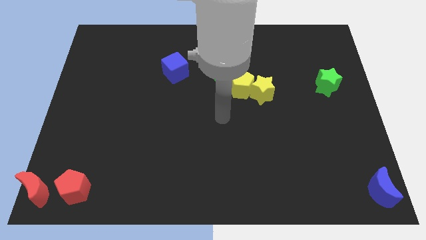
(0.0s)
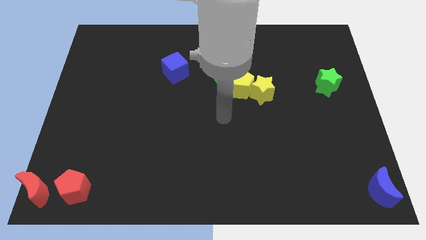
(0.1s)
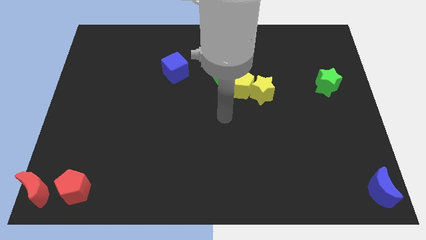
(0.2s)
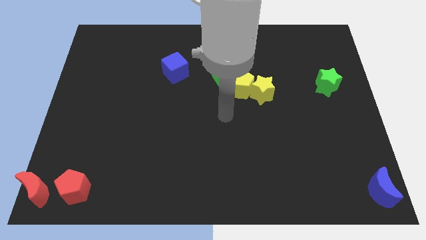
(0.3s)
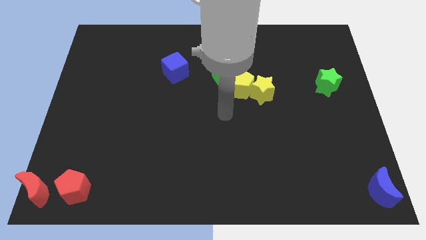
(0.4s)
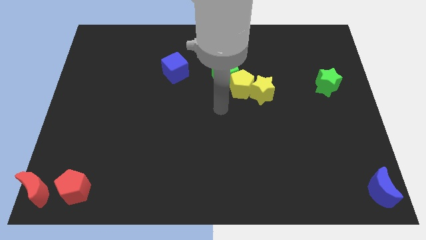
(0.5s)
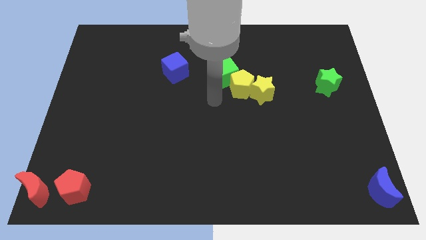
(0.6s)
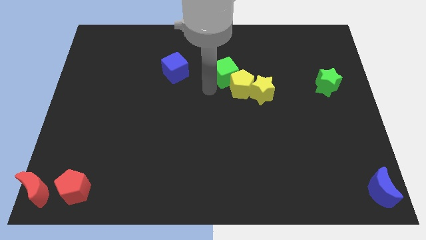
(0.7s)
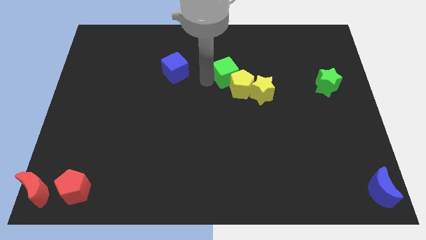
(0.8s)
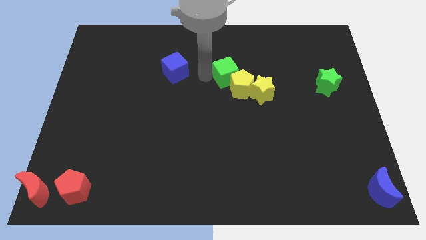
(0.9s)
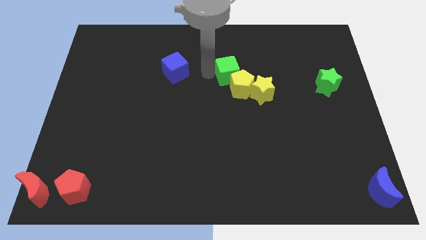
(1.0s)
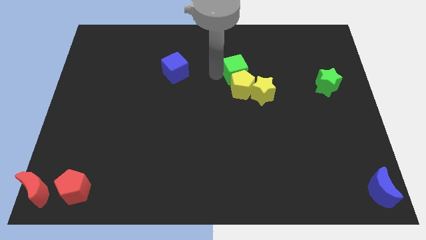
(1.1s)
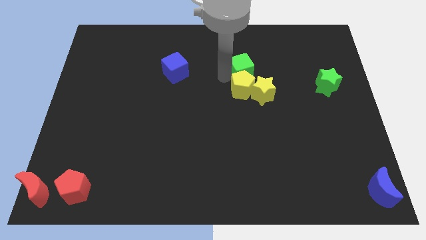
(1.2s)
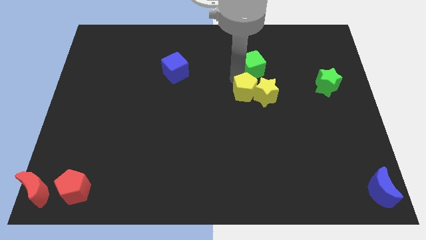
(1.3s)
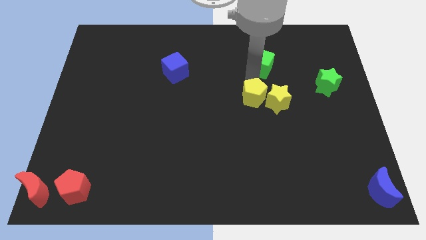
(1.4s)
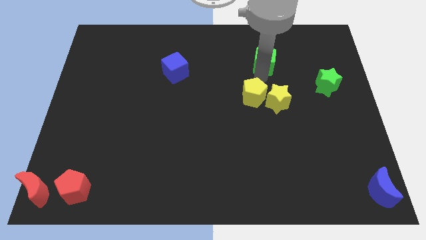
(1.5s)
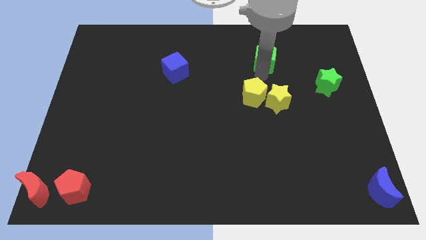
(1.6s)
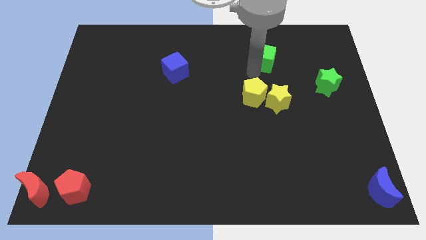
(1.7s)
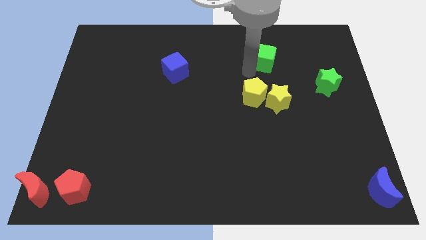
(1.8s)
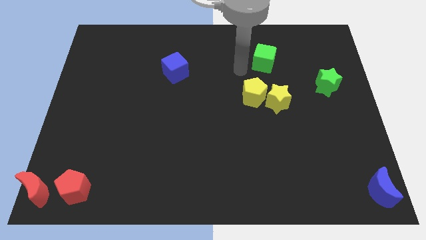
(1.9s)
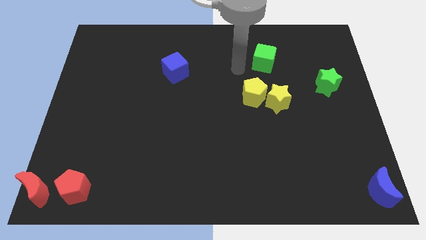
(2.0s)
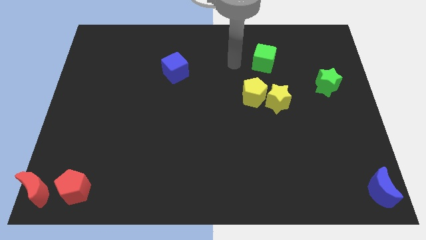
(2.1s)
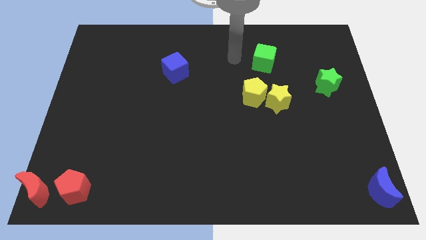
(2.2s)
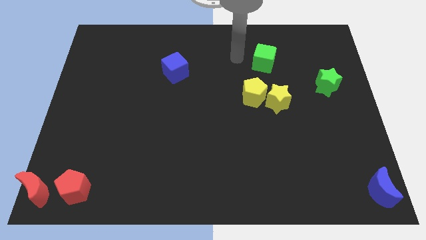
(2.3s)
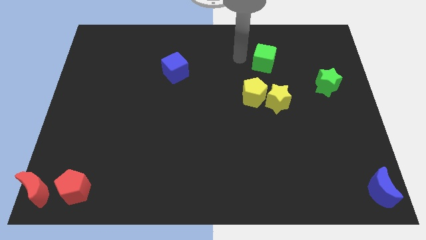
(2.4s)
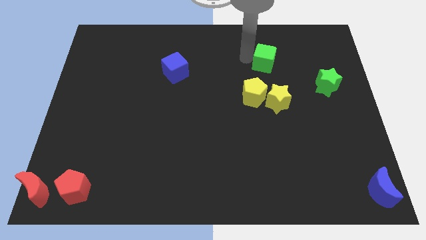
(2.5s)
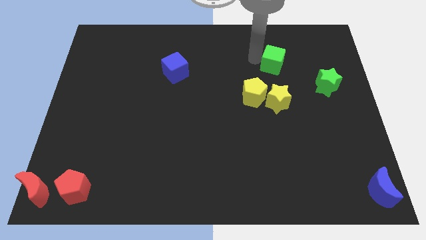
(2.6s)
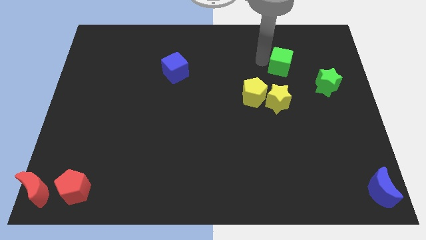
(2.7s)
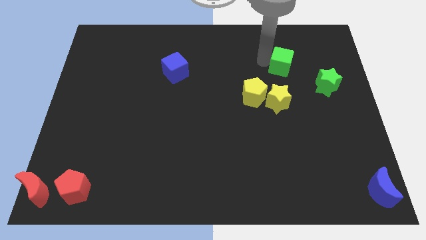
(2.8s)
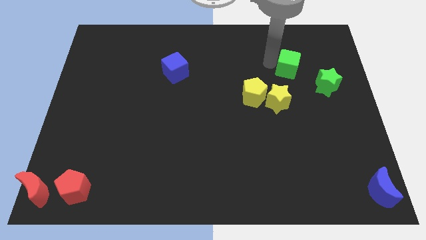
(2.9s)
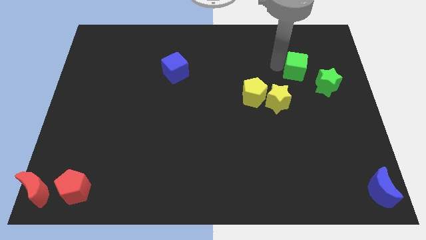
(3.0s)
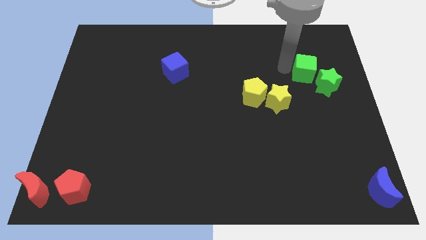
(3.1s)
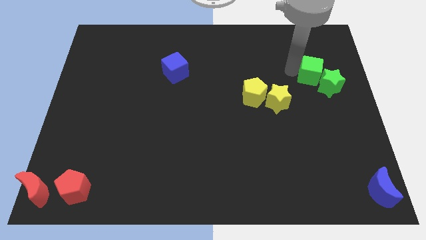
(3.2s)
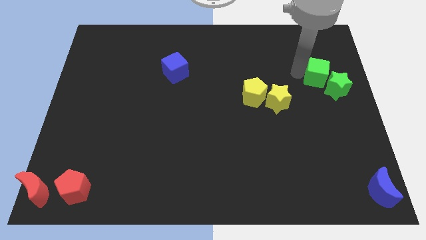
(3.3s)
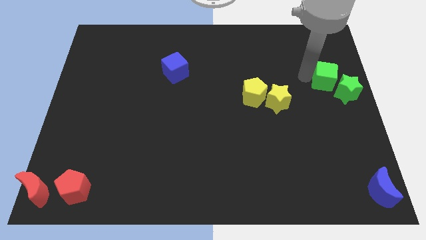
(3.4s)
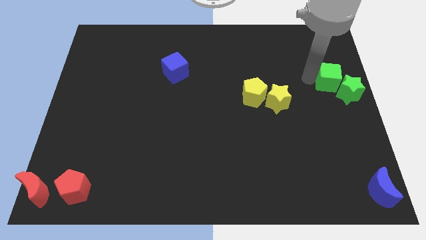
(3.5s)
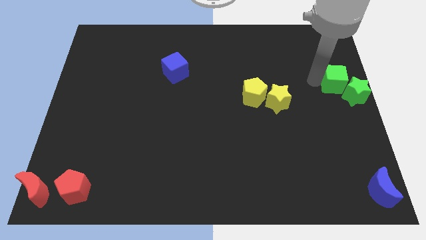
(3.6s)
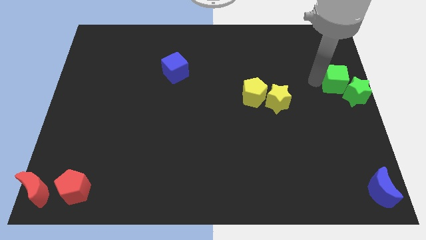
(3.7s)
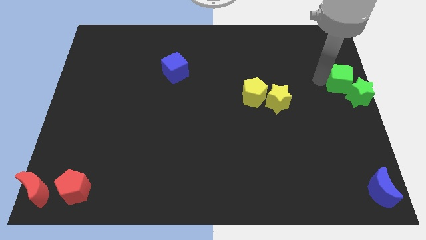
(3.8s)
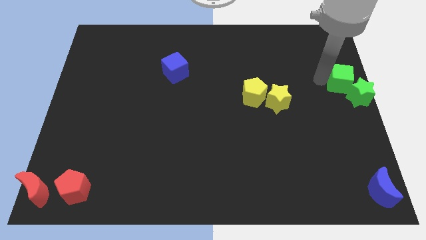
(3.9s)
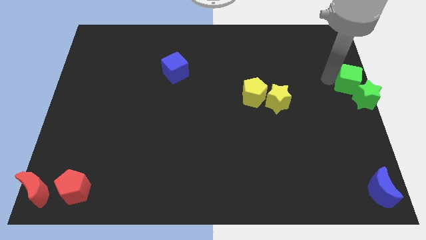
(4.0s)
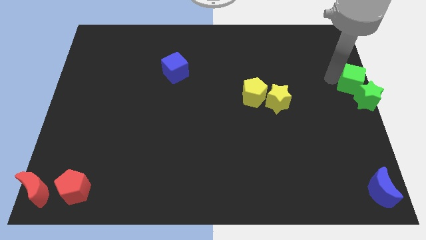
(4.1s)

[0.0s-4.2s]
adjust the green cube and the green star at the center left of the board

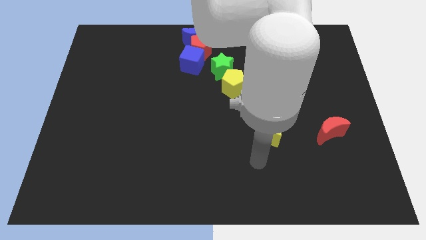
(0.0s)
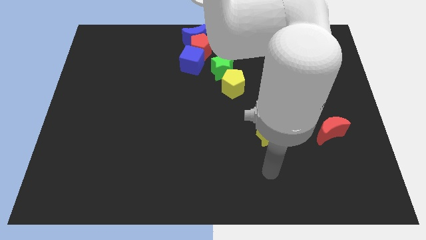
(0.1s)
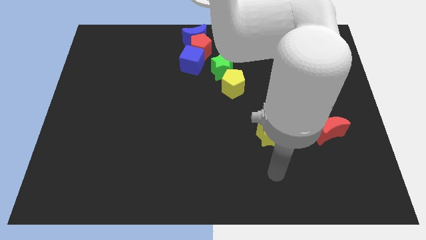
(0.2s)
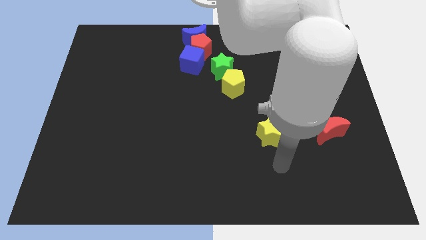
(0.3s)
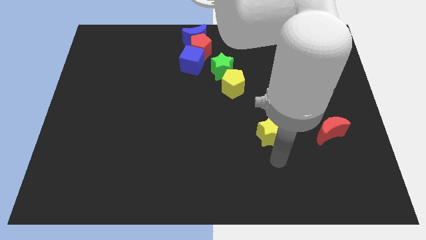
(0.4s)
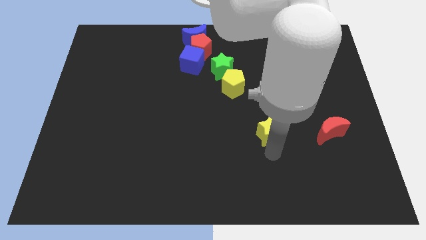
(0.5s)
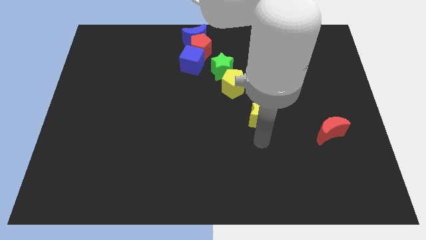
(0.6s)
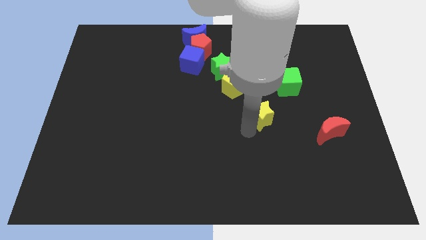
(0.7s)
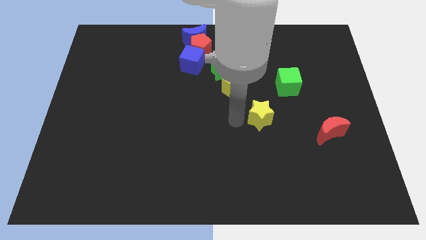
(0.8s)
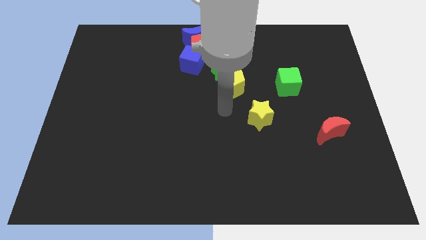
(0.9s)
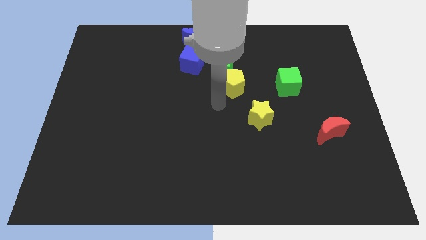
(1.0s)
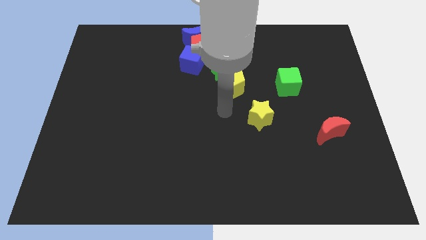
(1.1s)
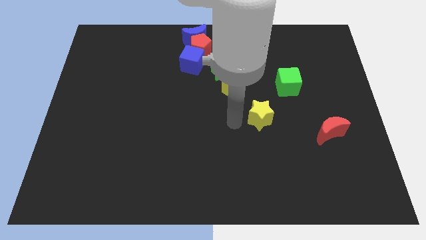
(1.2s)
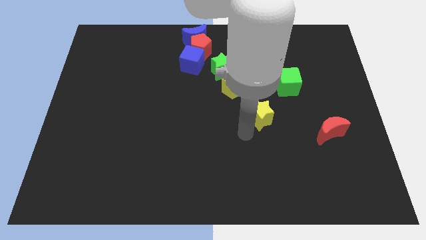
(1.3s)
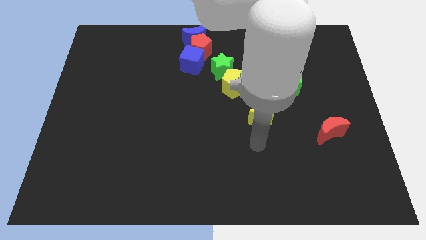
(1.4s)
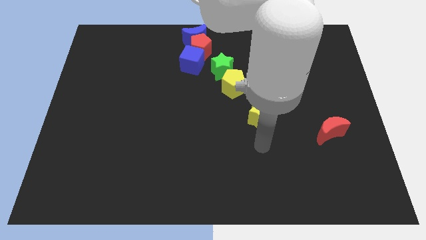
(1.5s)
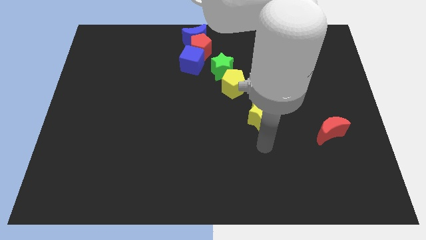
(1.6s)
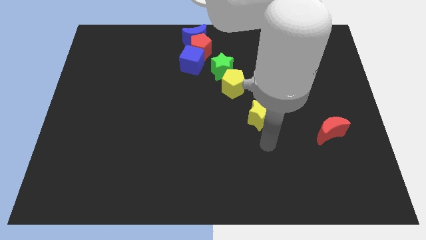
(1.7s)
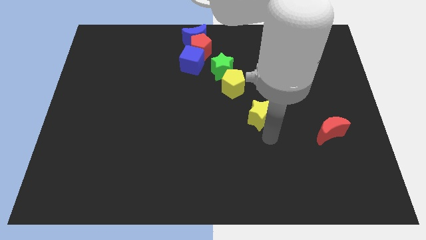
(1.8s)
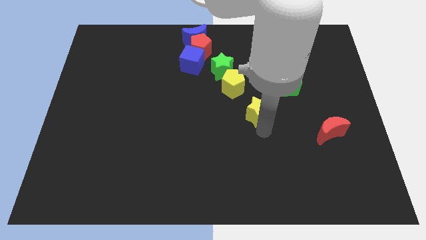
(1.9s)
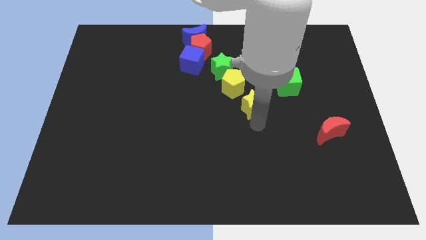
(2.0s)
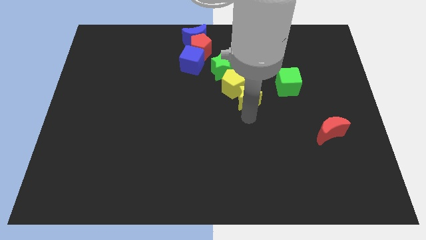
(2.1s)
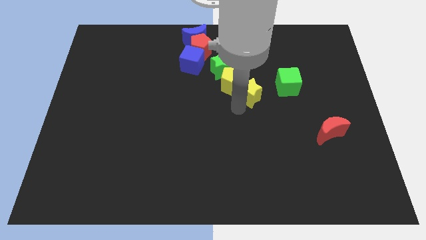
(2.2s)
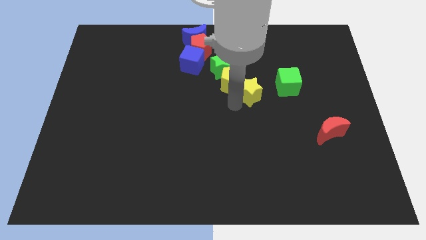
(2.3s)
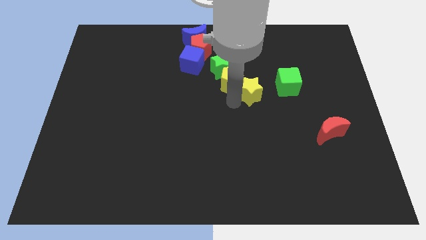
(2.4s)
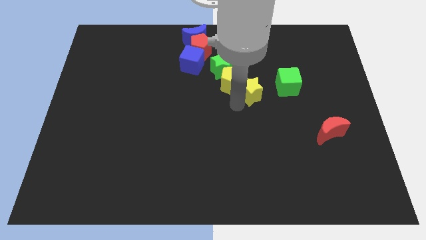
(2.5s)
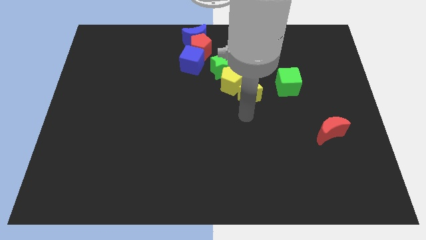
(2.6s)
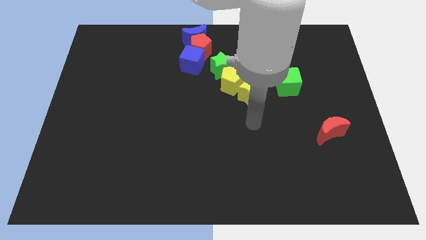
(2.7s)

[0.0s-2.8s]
place yellow star close yellow pentagon

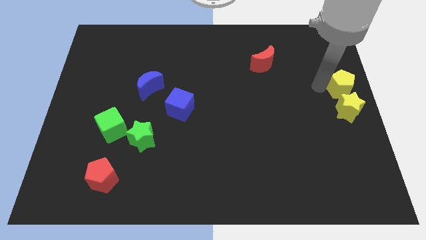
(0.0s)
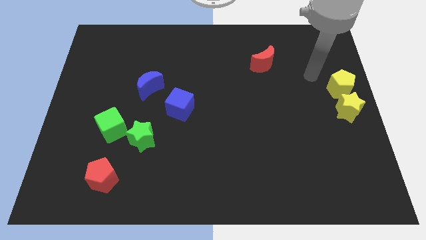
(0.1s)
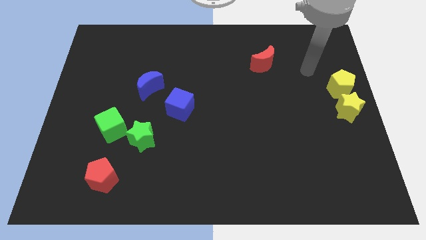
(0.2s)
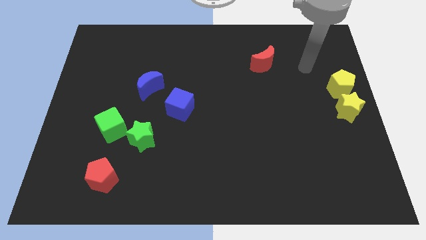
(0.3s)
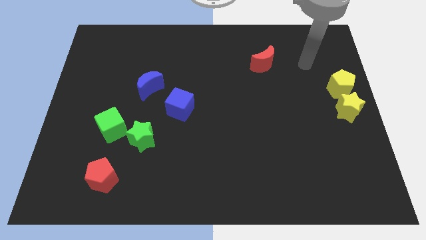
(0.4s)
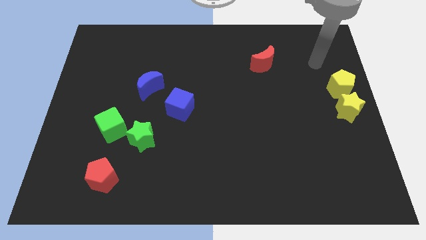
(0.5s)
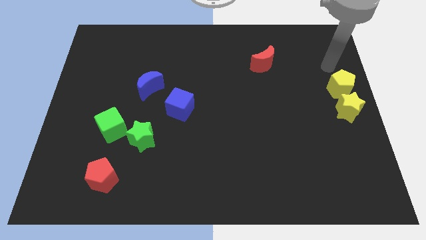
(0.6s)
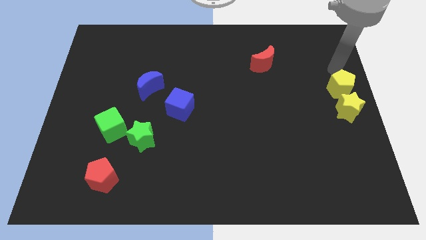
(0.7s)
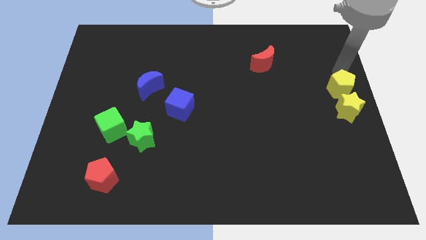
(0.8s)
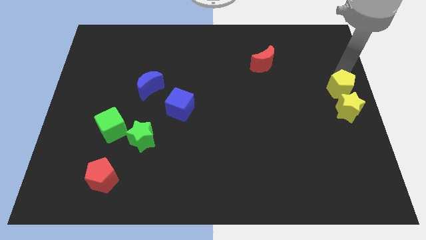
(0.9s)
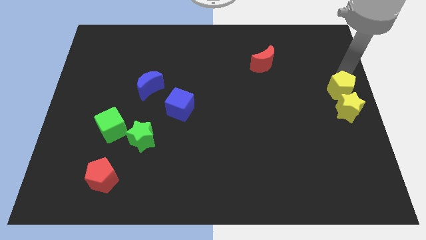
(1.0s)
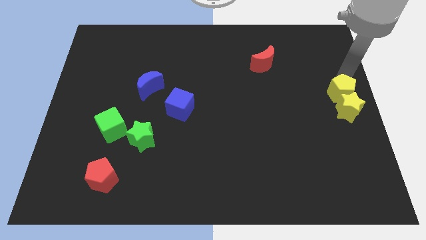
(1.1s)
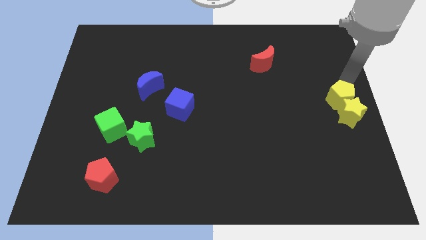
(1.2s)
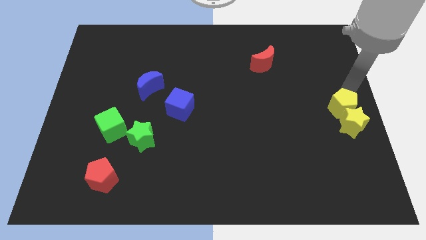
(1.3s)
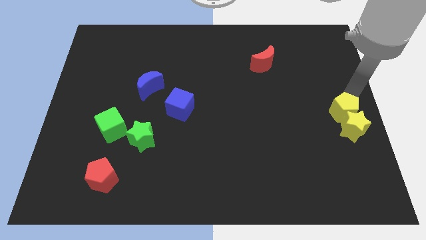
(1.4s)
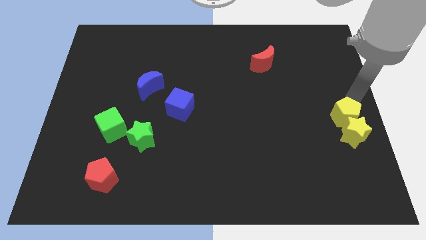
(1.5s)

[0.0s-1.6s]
push yellow pentagon and yellow star together downwards

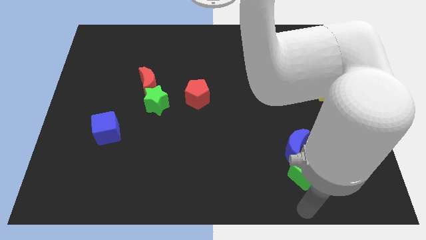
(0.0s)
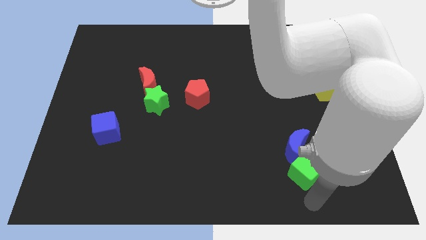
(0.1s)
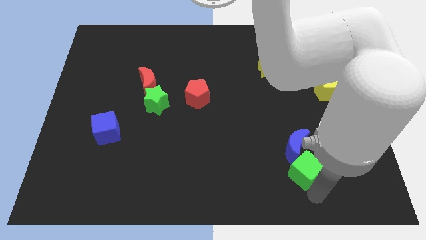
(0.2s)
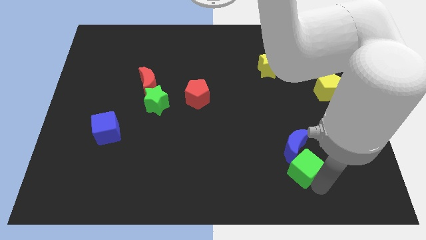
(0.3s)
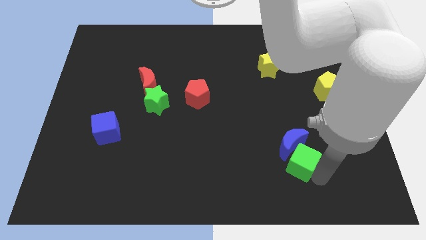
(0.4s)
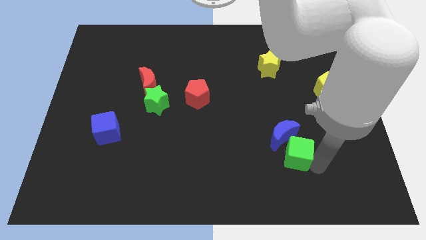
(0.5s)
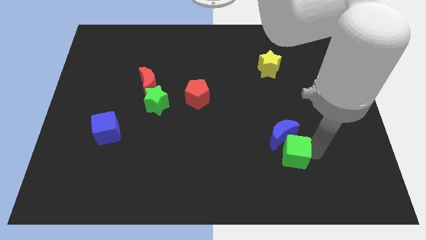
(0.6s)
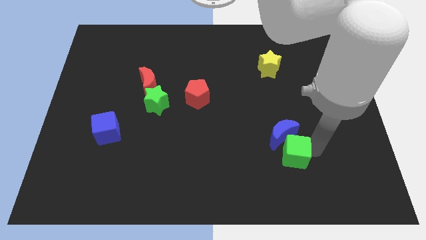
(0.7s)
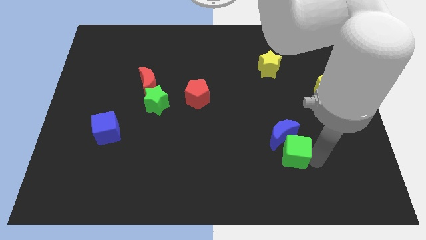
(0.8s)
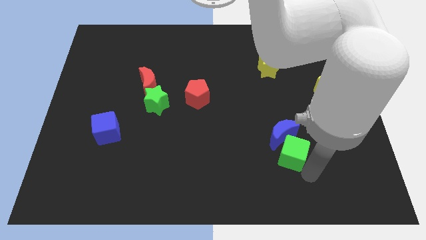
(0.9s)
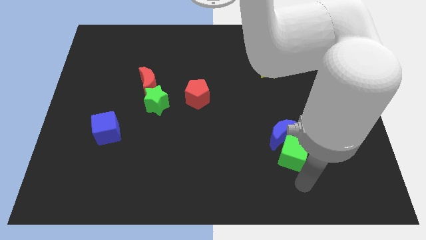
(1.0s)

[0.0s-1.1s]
push the green cube and blue moon towards the top side of the board
